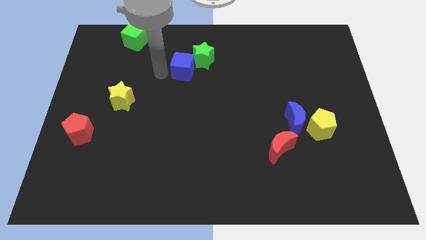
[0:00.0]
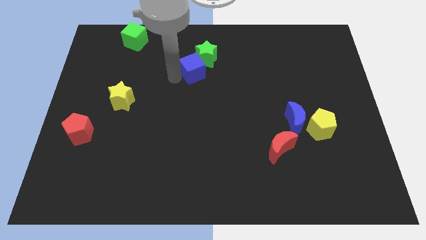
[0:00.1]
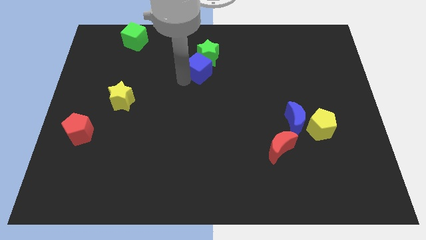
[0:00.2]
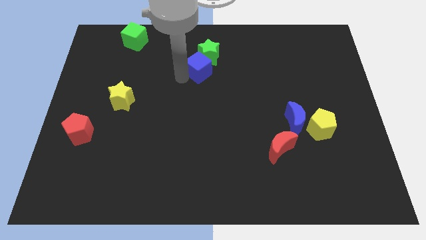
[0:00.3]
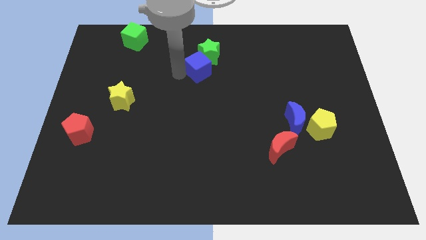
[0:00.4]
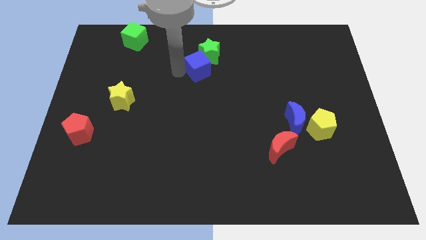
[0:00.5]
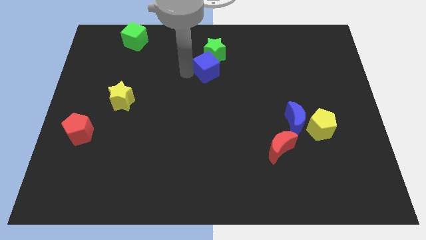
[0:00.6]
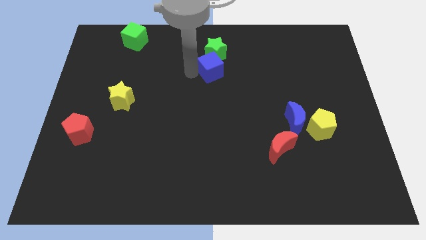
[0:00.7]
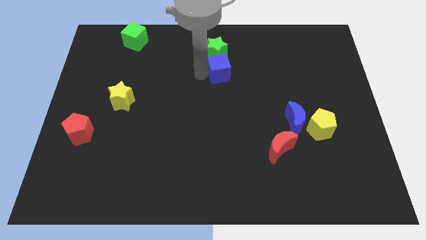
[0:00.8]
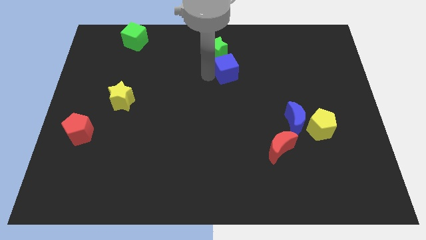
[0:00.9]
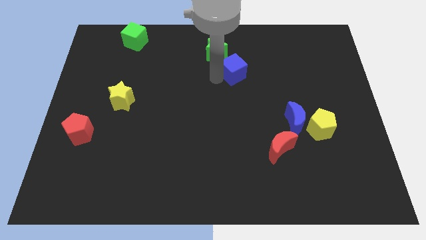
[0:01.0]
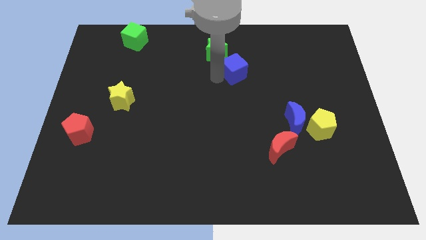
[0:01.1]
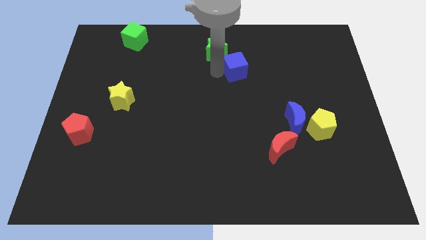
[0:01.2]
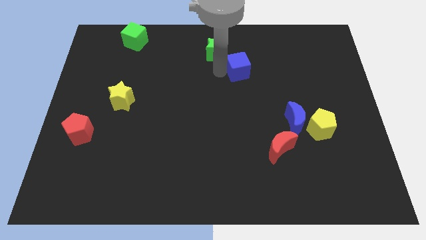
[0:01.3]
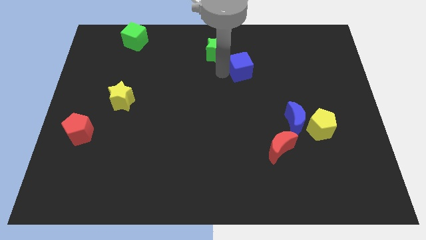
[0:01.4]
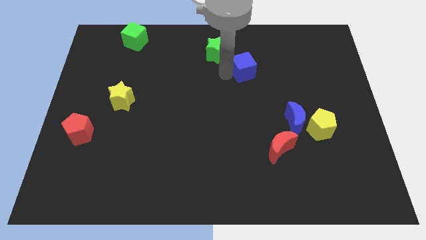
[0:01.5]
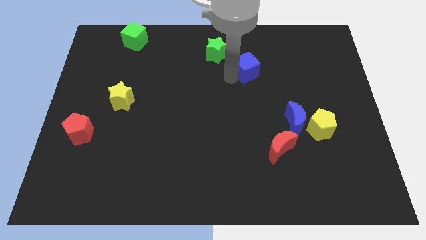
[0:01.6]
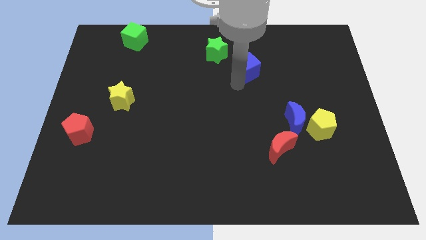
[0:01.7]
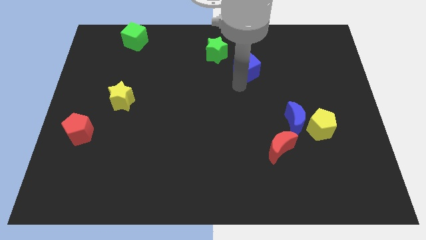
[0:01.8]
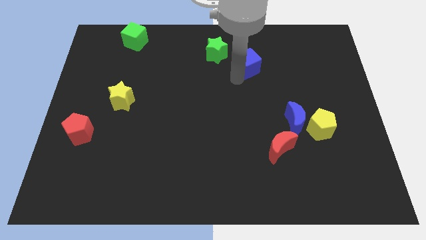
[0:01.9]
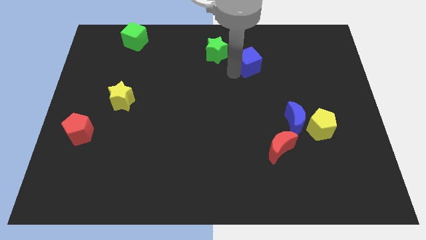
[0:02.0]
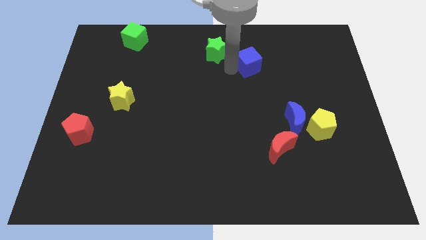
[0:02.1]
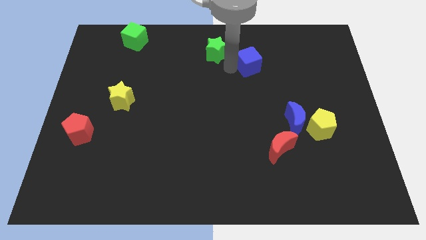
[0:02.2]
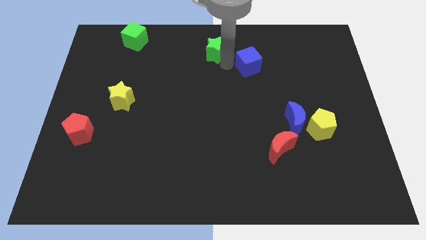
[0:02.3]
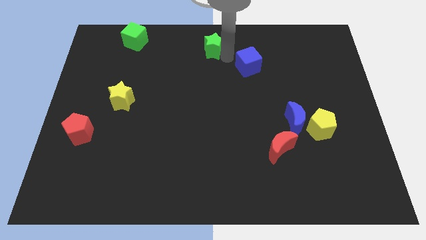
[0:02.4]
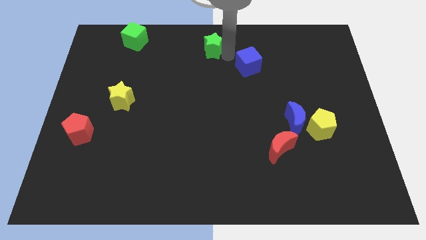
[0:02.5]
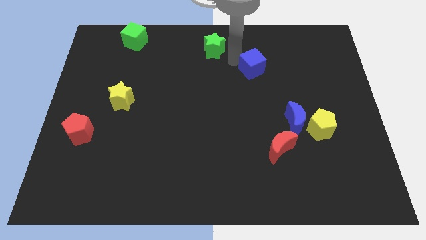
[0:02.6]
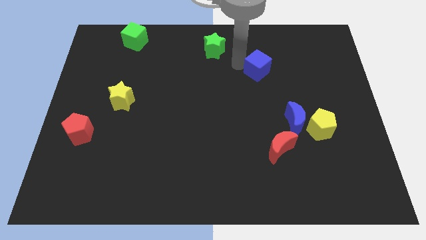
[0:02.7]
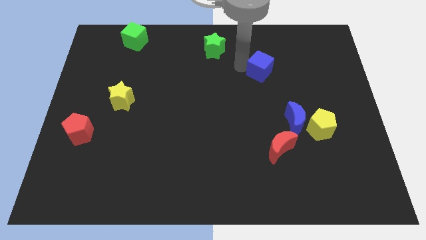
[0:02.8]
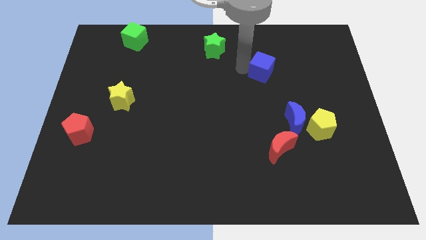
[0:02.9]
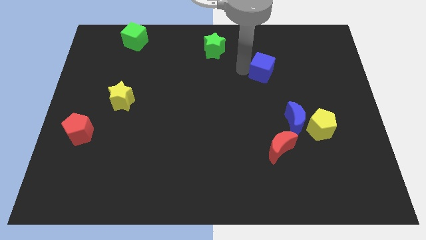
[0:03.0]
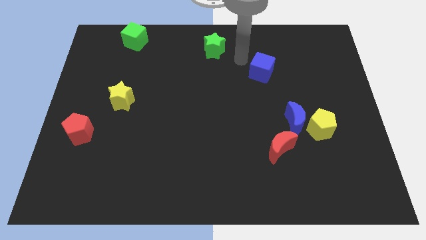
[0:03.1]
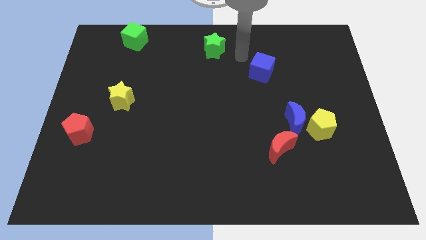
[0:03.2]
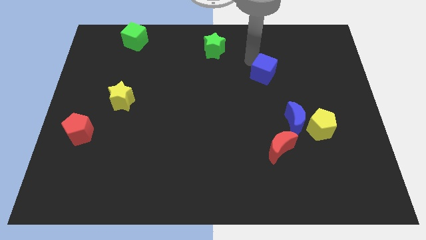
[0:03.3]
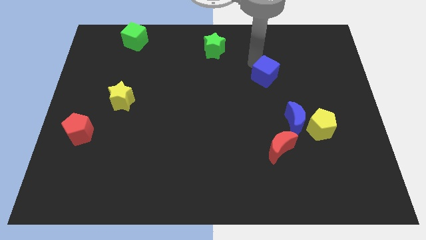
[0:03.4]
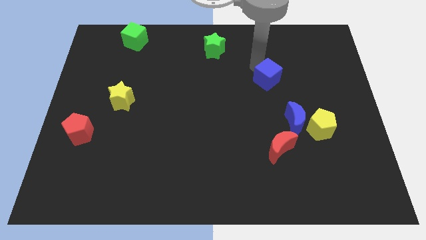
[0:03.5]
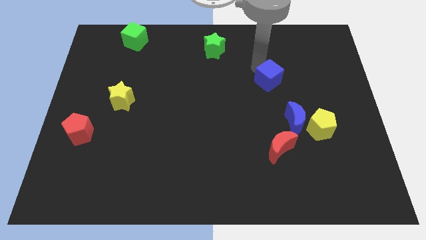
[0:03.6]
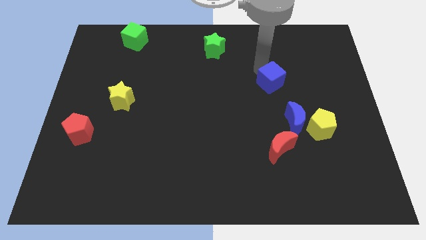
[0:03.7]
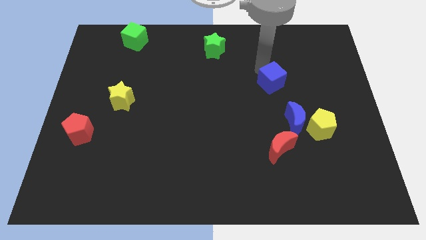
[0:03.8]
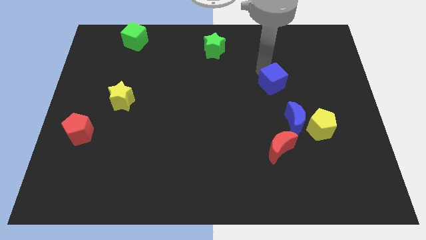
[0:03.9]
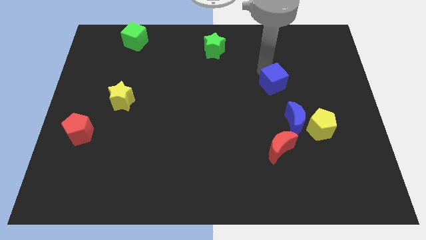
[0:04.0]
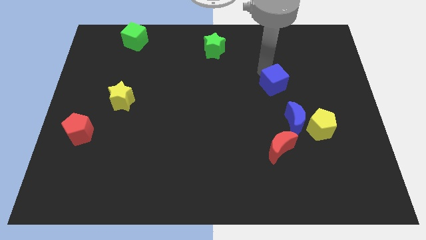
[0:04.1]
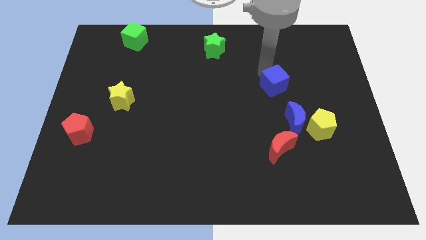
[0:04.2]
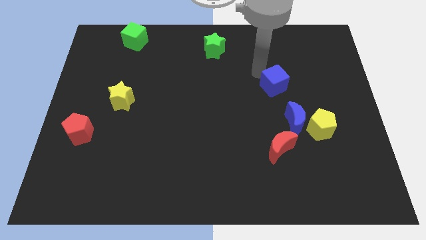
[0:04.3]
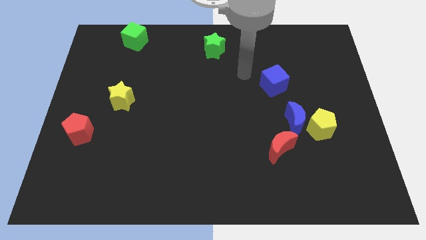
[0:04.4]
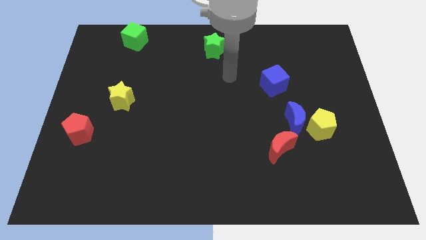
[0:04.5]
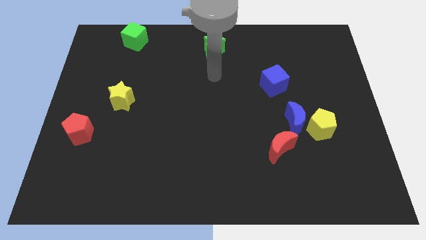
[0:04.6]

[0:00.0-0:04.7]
separate the blue cube from the green star

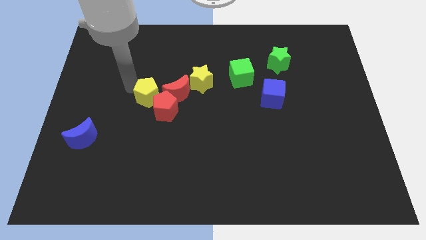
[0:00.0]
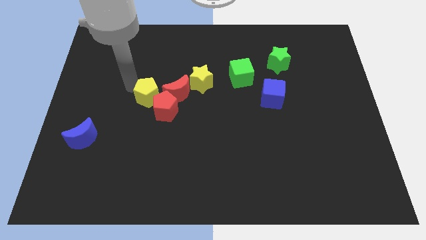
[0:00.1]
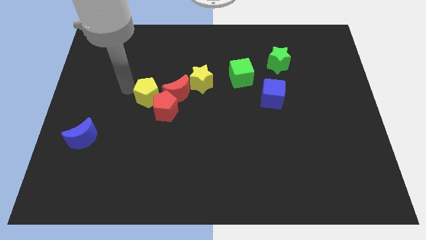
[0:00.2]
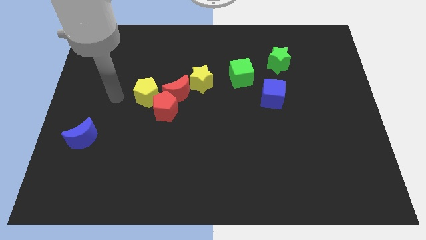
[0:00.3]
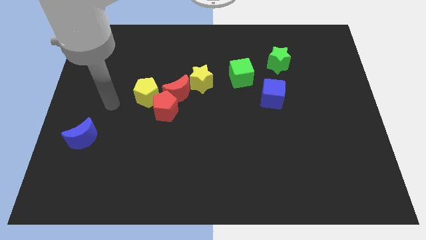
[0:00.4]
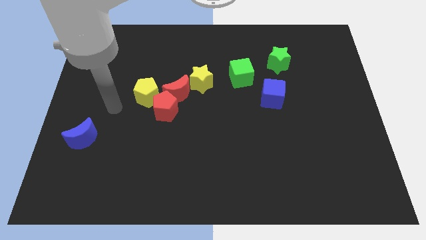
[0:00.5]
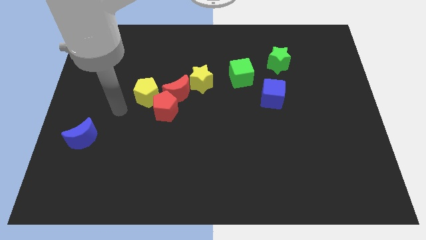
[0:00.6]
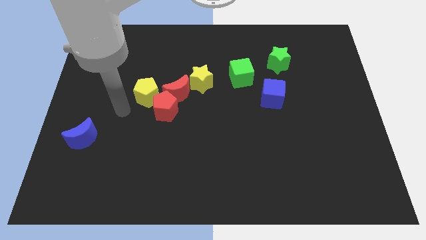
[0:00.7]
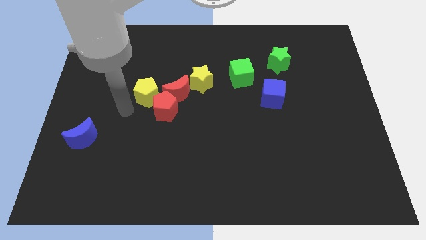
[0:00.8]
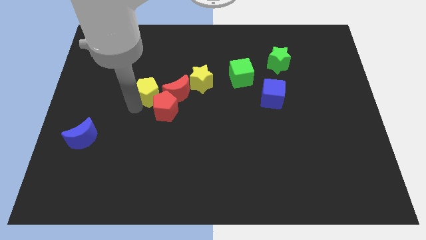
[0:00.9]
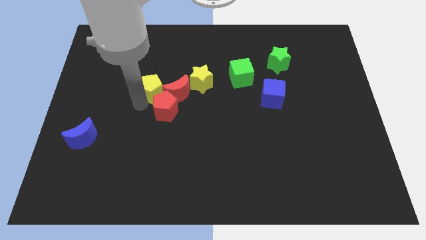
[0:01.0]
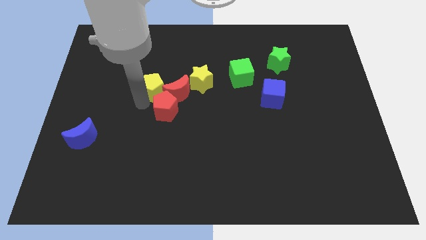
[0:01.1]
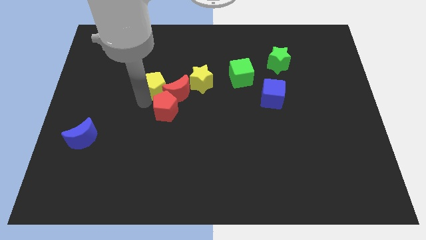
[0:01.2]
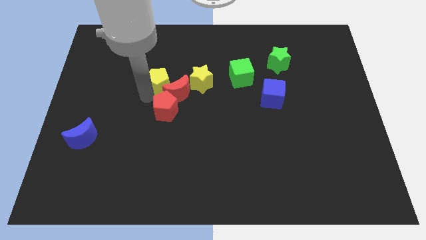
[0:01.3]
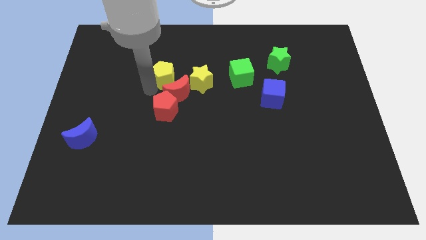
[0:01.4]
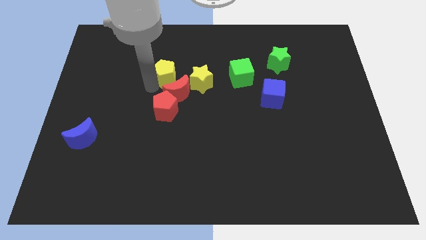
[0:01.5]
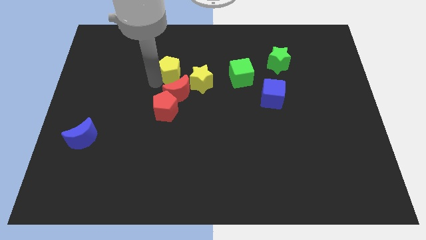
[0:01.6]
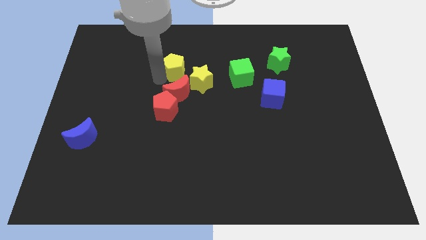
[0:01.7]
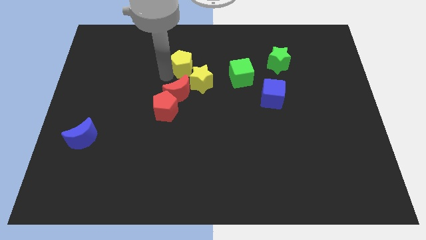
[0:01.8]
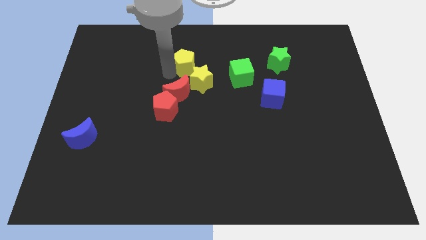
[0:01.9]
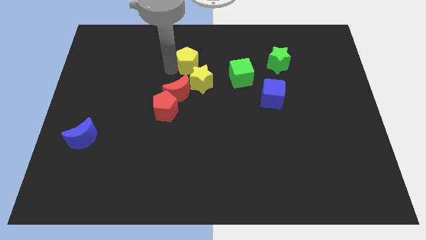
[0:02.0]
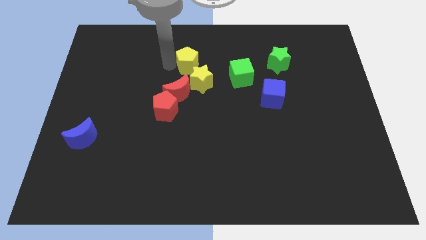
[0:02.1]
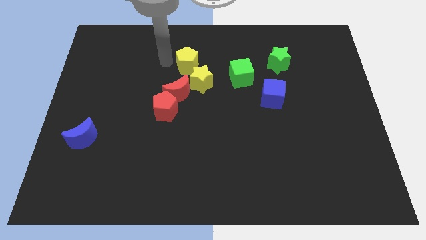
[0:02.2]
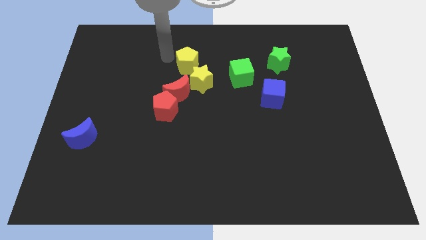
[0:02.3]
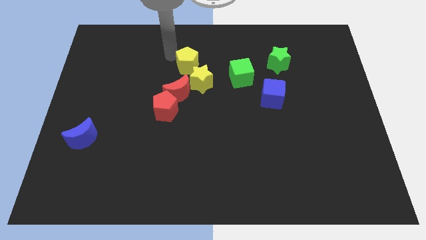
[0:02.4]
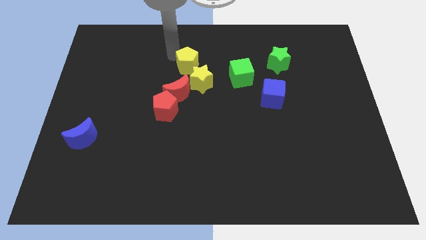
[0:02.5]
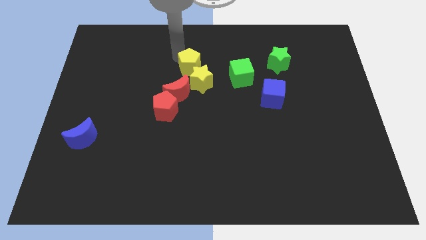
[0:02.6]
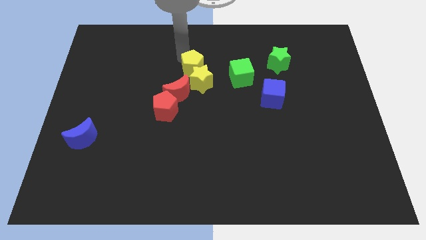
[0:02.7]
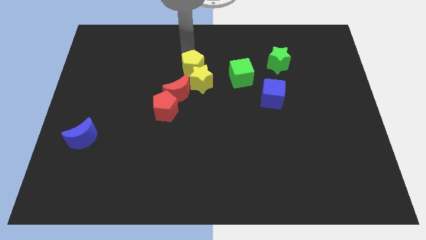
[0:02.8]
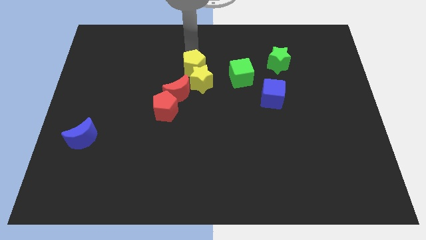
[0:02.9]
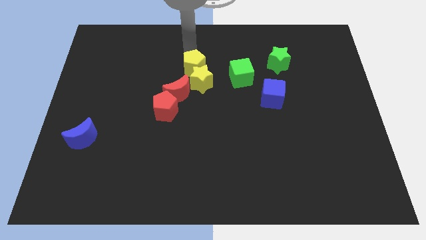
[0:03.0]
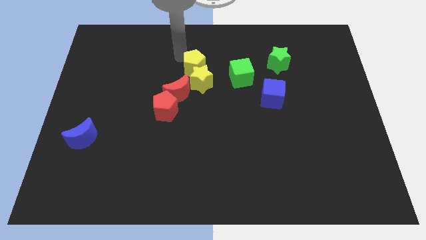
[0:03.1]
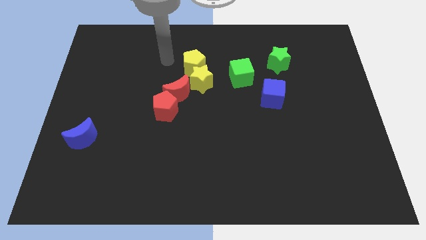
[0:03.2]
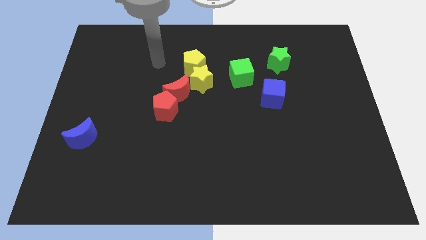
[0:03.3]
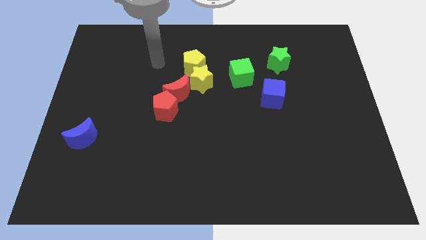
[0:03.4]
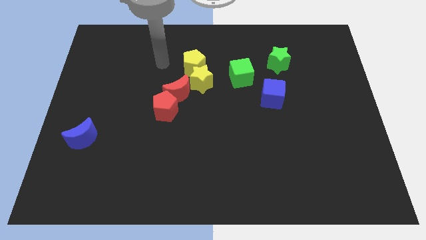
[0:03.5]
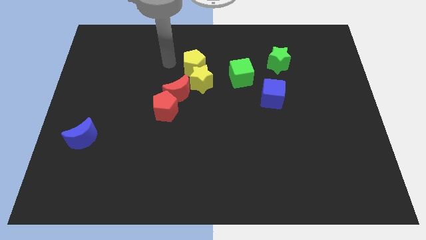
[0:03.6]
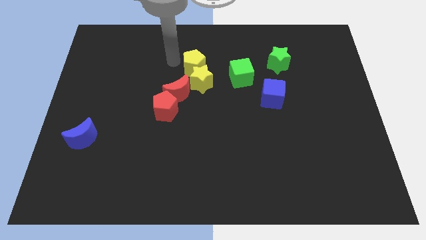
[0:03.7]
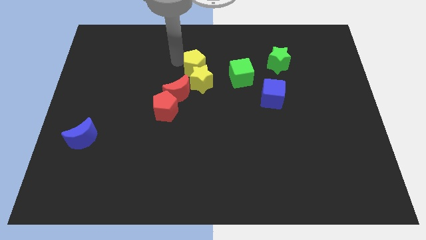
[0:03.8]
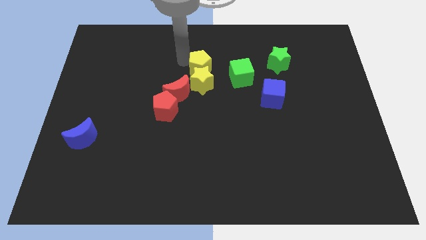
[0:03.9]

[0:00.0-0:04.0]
move the yellow pentagon above the yellow star

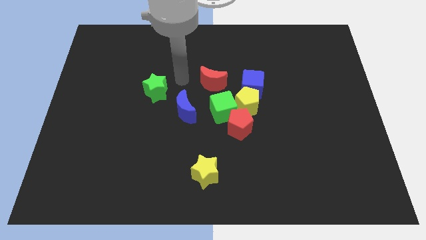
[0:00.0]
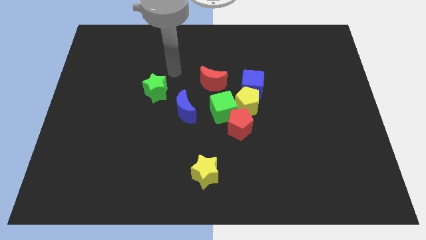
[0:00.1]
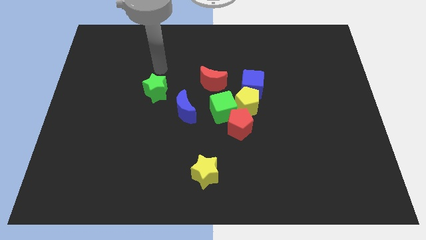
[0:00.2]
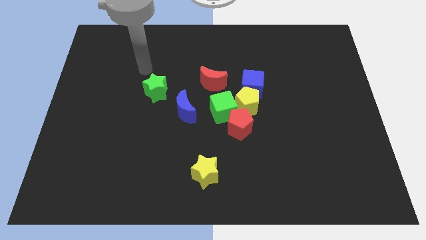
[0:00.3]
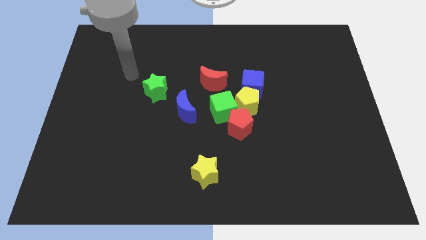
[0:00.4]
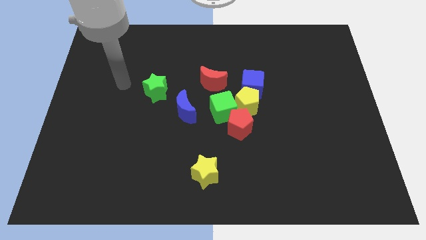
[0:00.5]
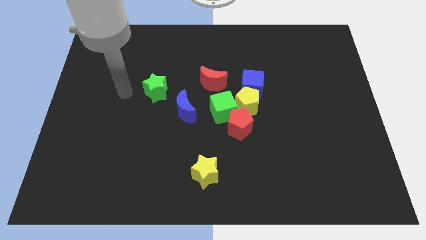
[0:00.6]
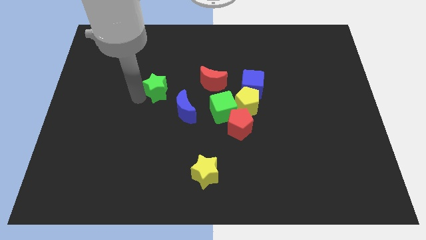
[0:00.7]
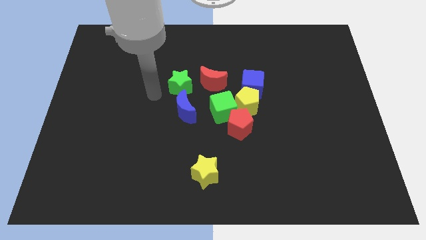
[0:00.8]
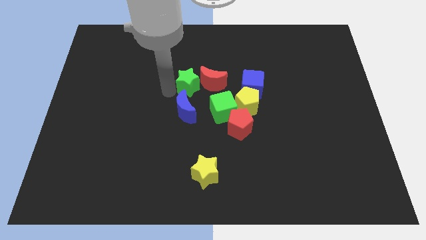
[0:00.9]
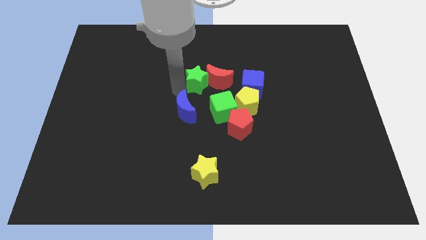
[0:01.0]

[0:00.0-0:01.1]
move the green star into the red crescent
